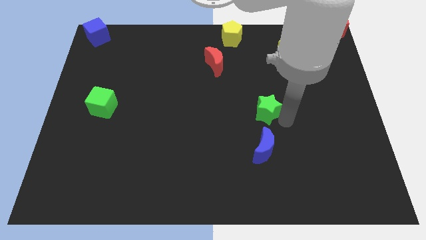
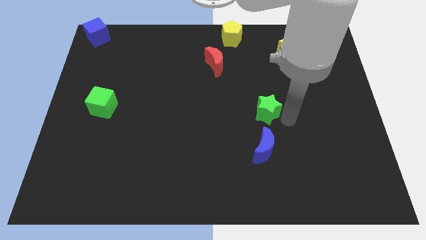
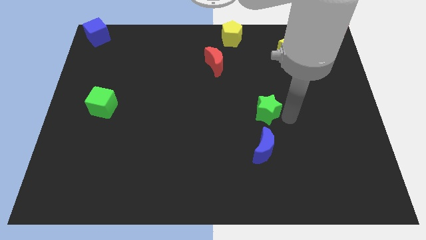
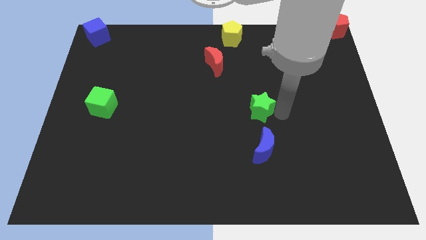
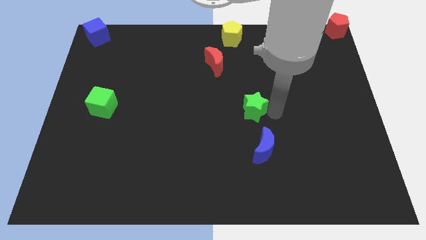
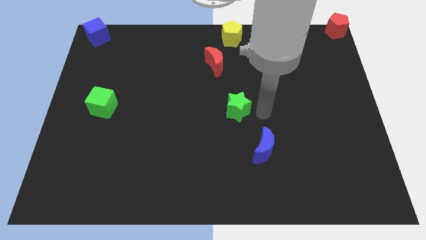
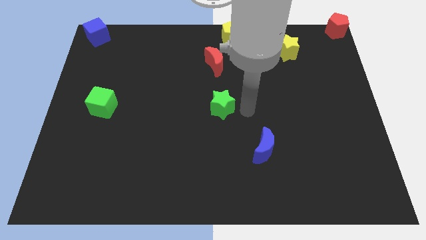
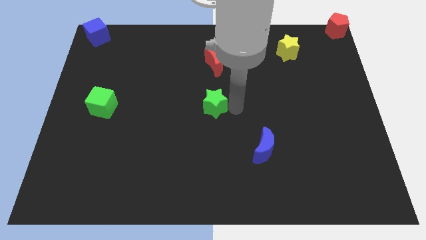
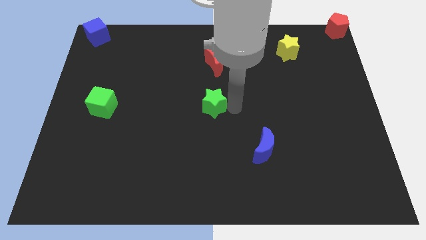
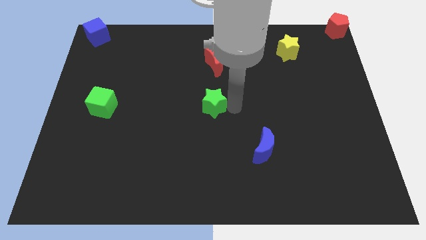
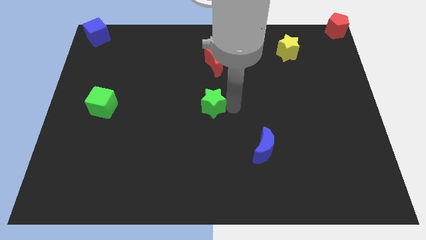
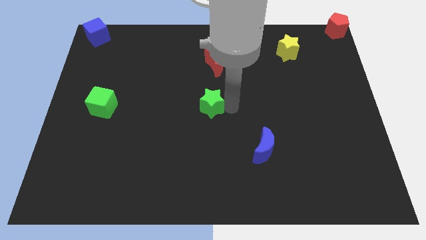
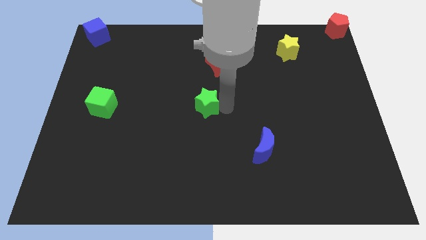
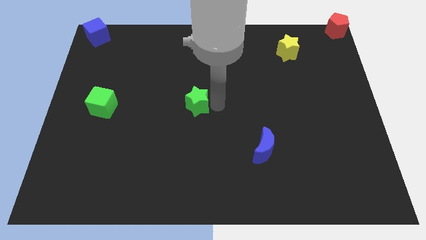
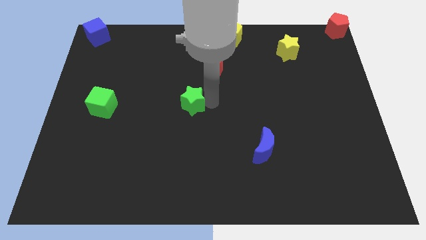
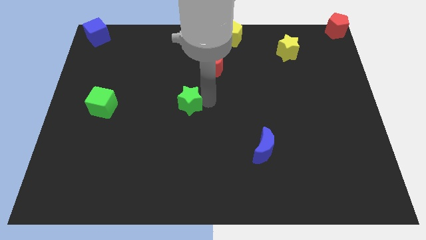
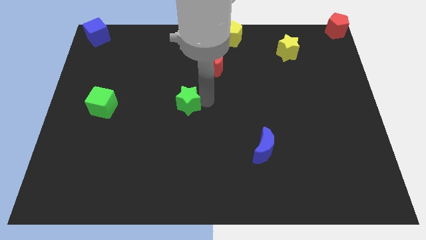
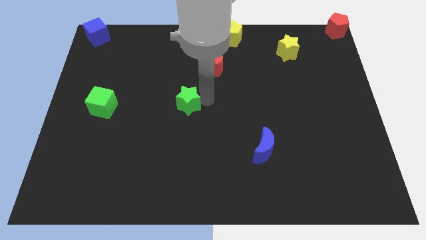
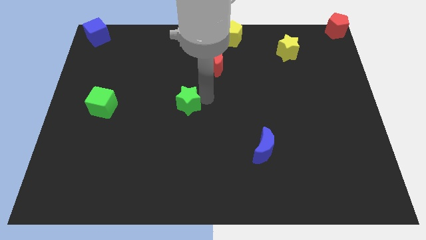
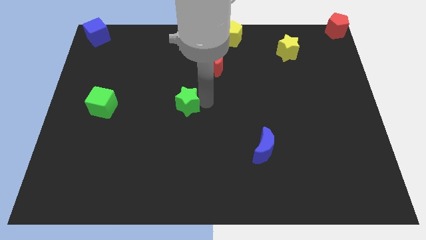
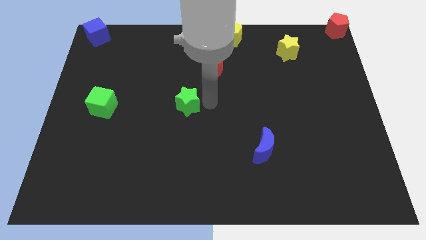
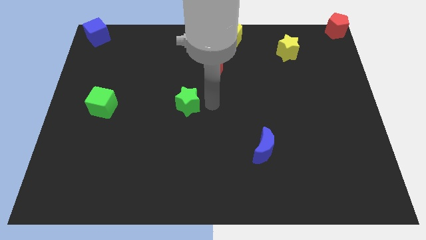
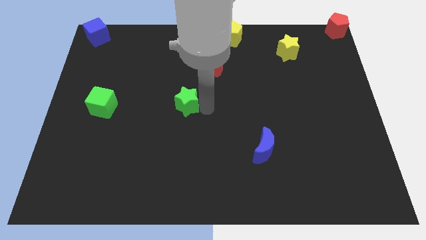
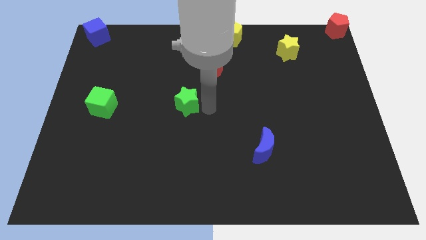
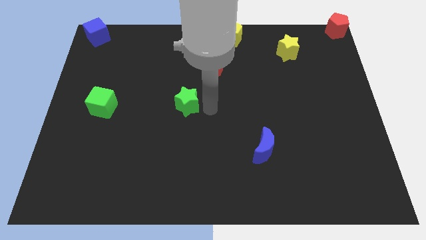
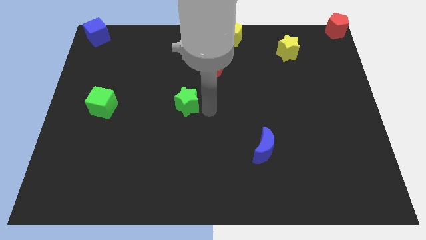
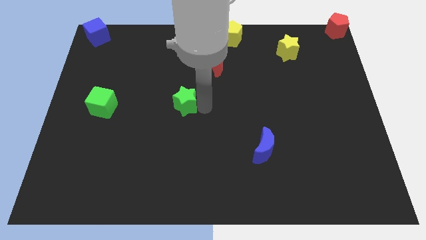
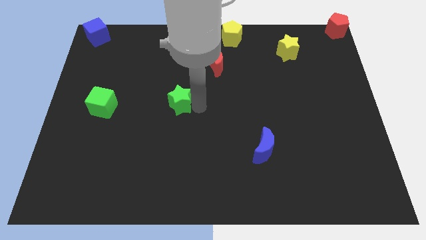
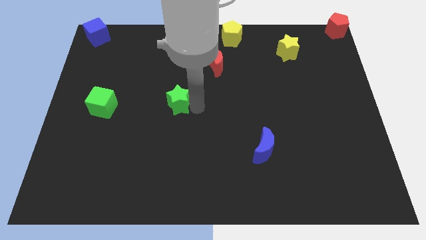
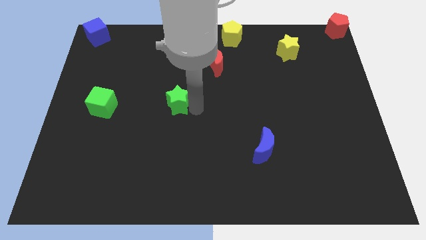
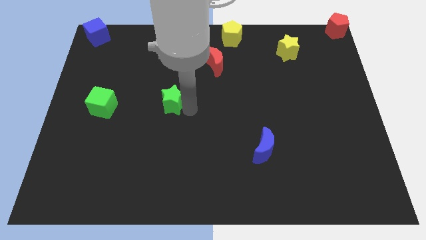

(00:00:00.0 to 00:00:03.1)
slide the green star horizontally to the right side of the green cube

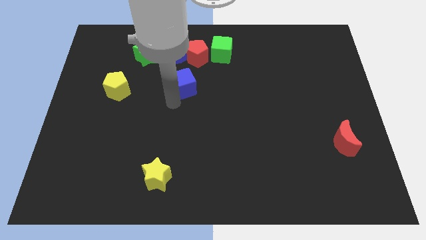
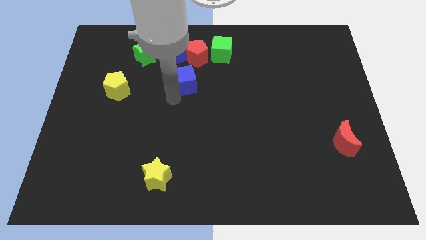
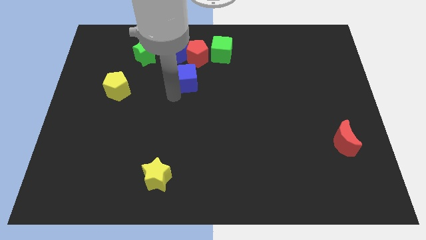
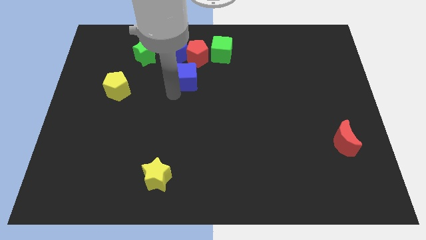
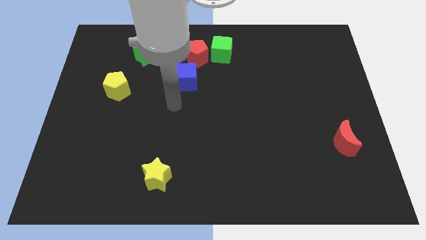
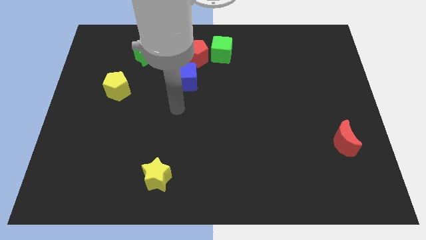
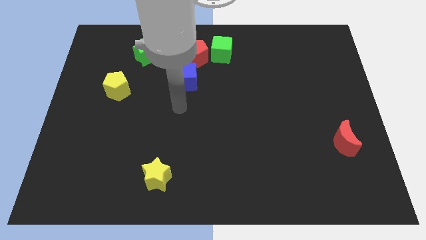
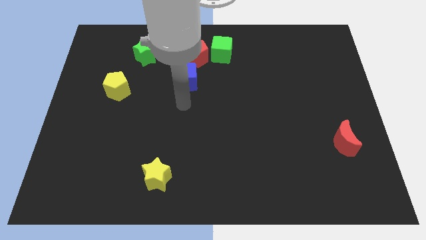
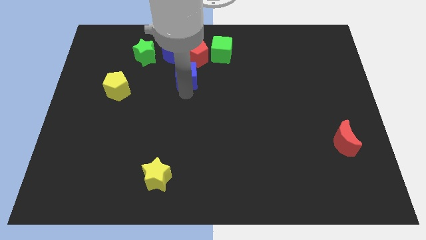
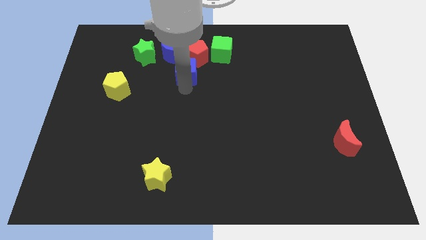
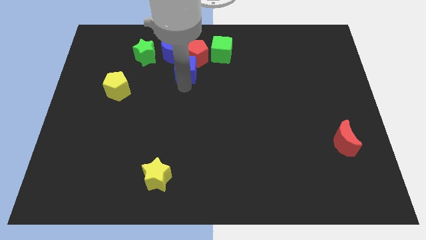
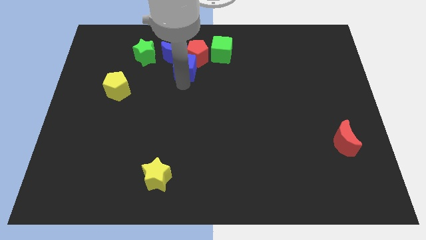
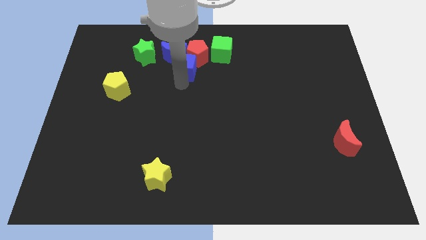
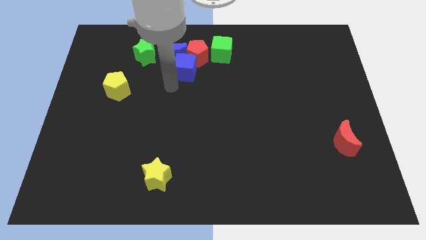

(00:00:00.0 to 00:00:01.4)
move the blue cube close to the blue moon

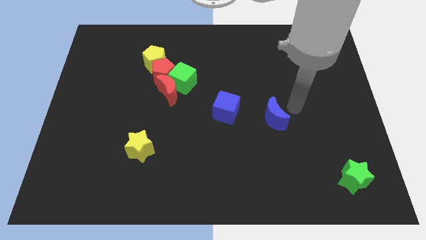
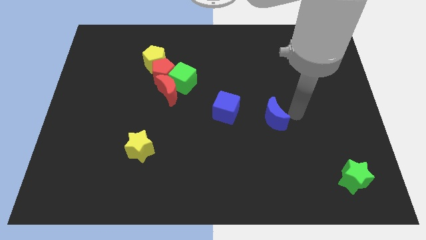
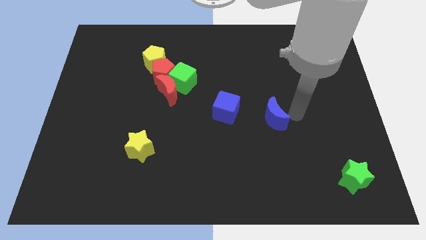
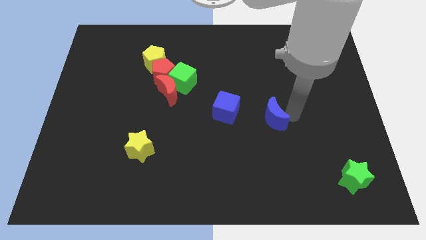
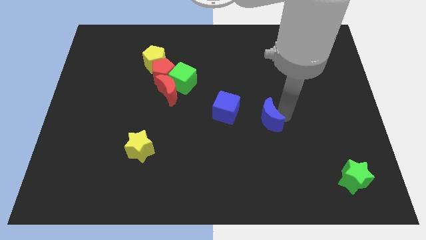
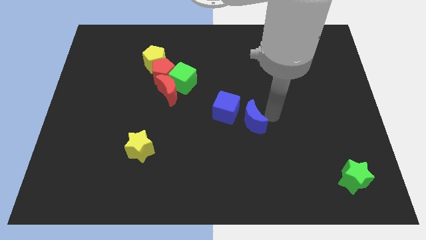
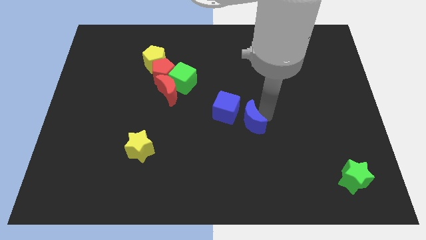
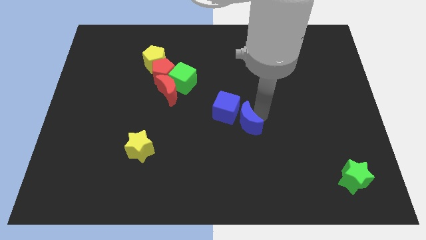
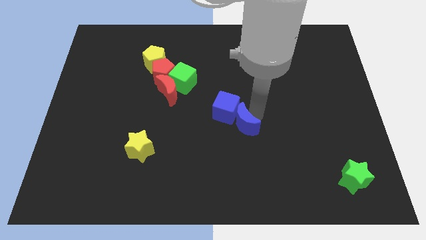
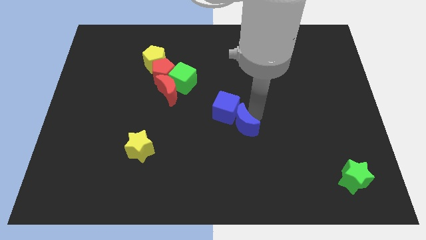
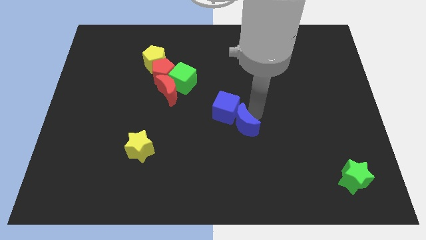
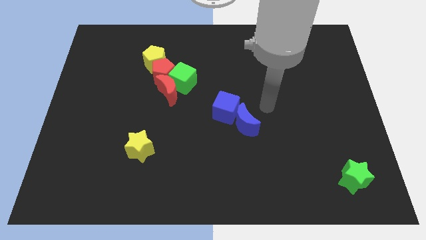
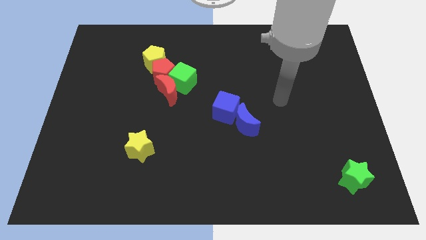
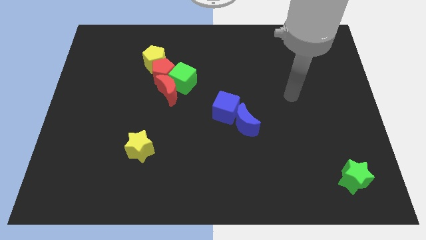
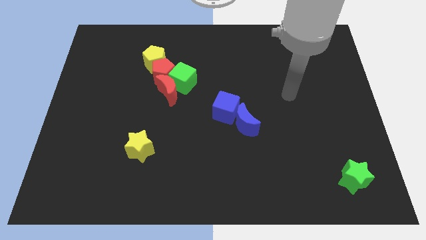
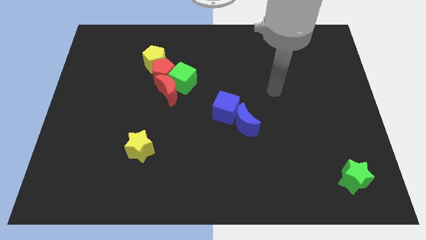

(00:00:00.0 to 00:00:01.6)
attach the blue moon to the blue cube

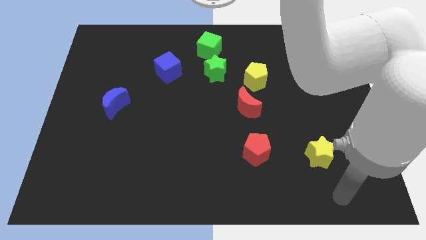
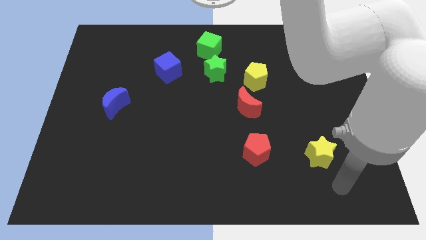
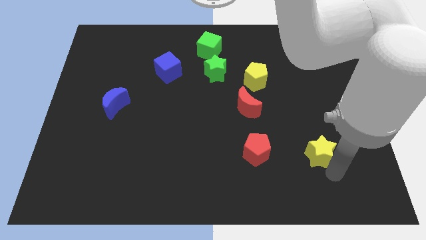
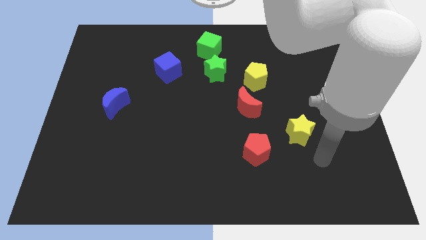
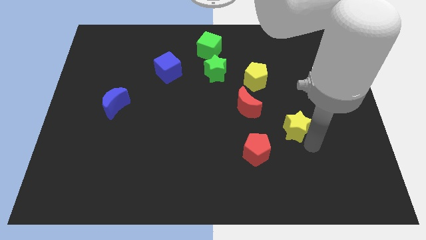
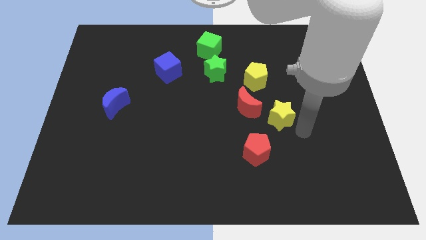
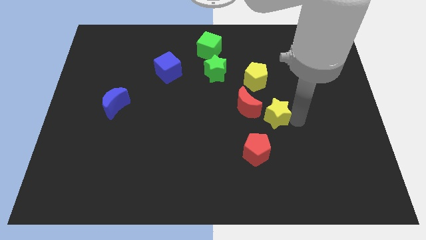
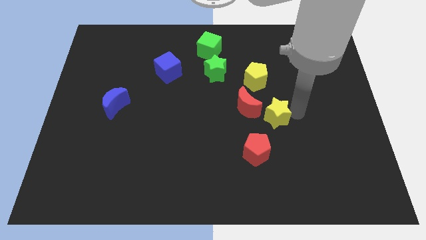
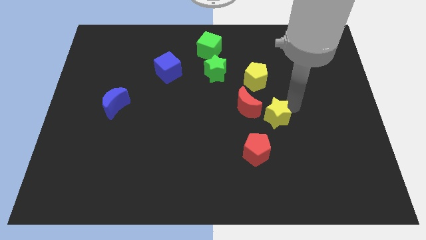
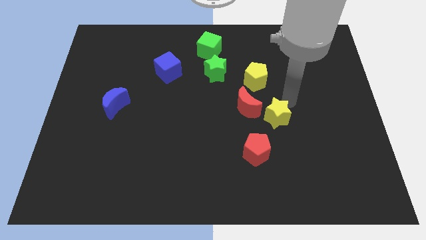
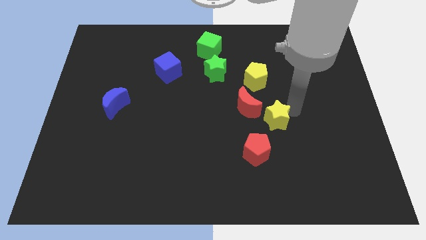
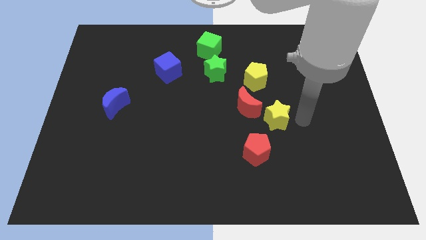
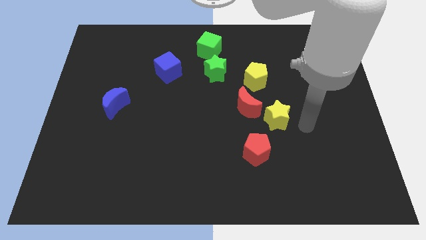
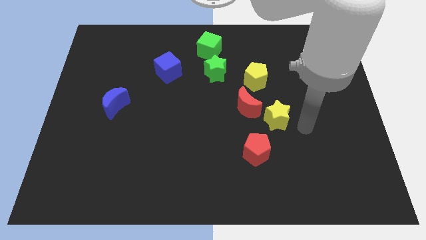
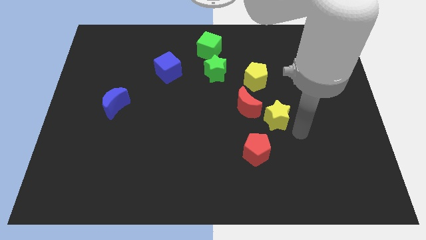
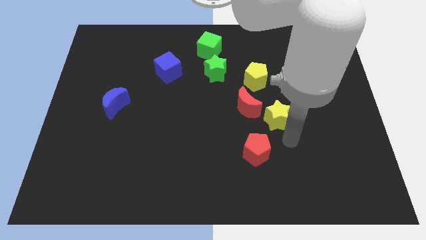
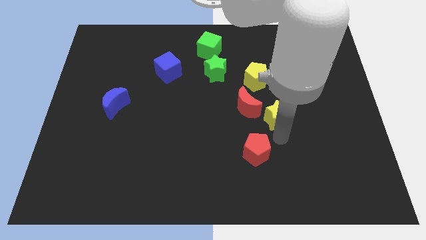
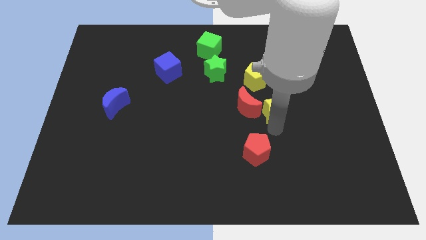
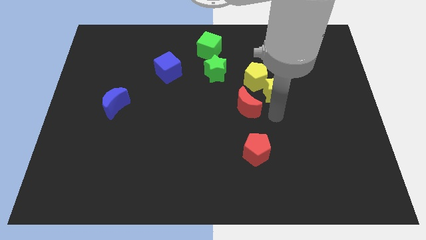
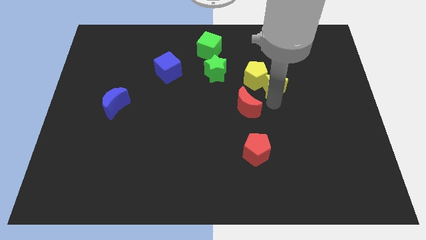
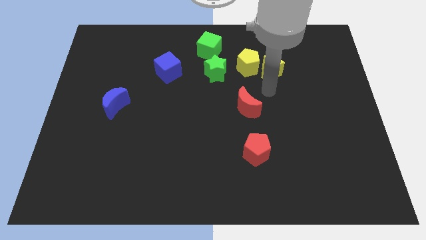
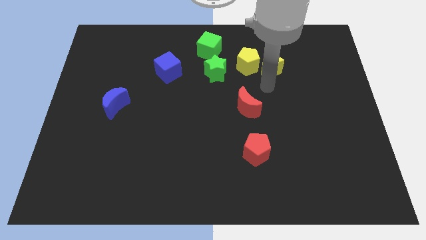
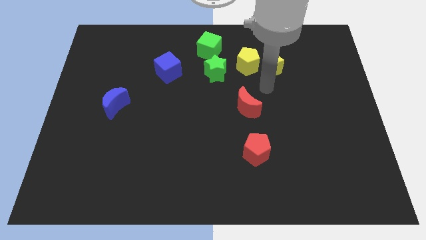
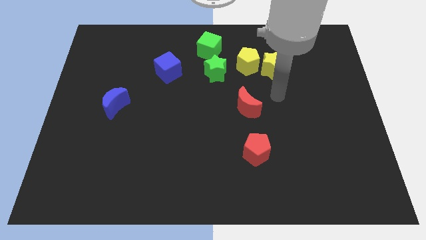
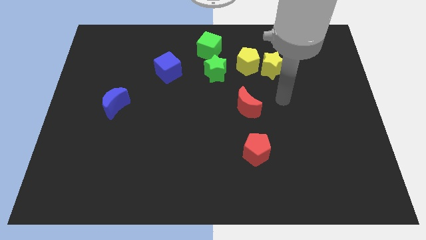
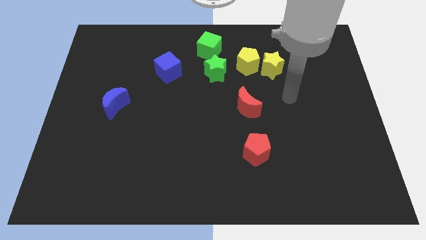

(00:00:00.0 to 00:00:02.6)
move the yellow star right to the yellow pentagon

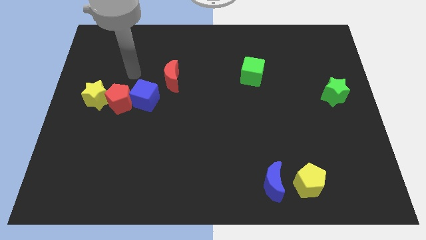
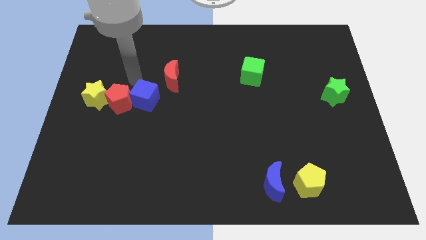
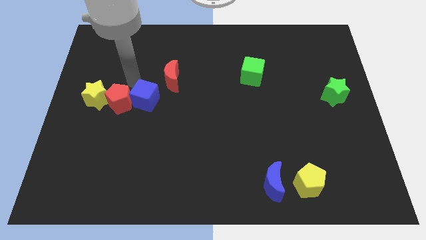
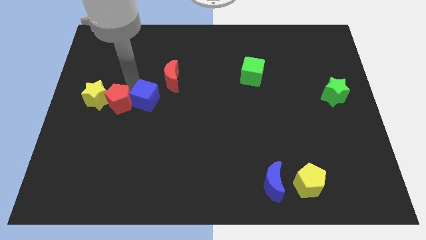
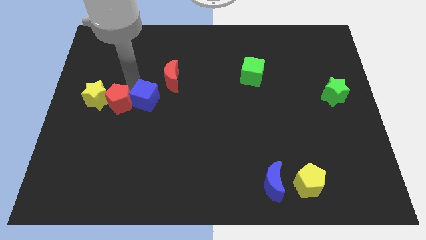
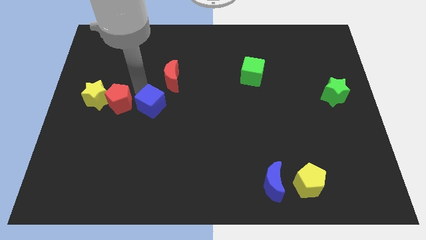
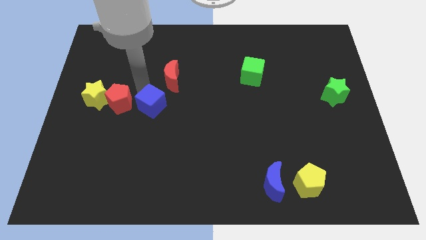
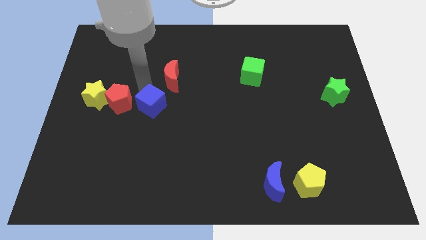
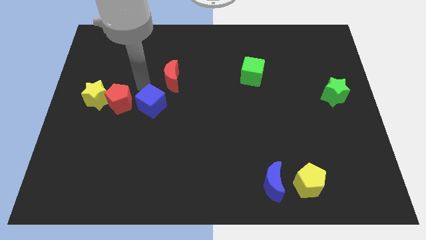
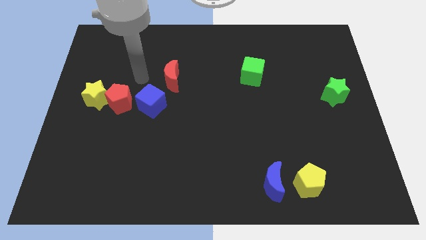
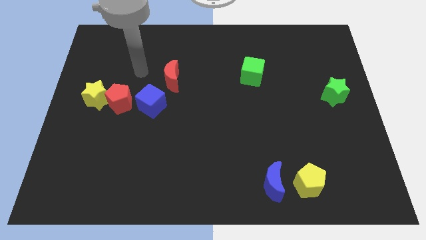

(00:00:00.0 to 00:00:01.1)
slightly move down the blue cube
